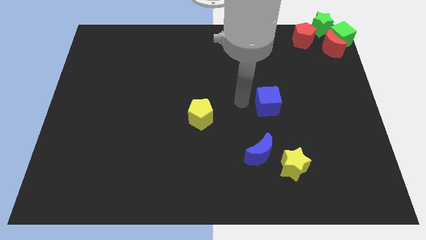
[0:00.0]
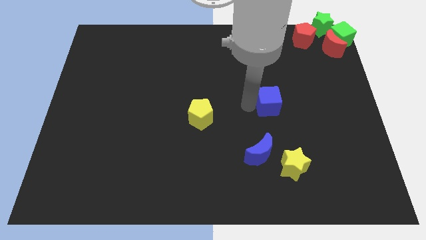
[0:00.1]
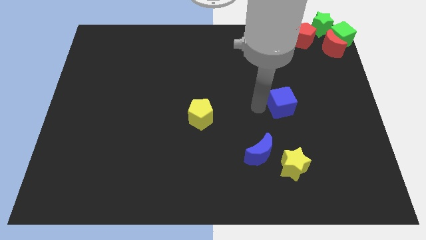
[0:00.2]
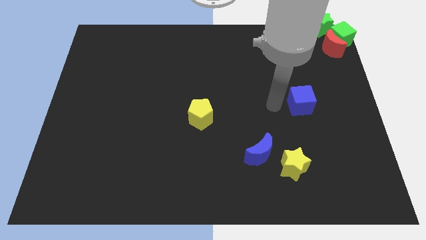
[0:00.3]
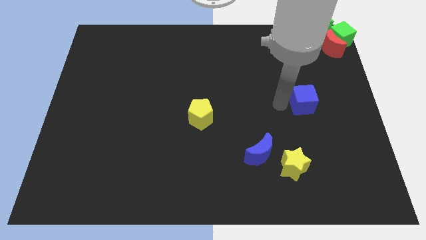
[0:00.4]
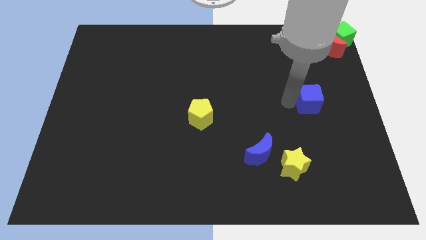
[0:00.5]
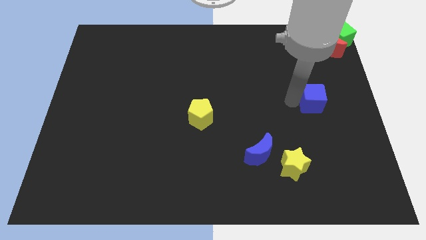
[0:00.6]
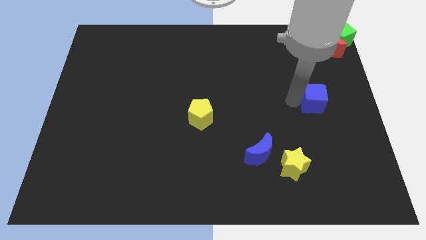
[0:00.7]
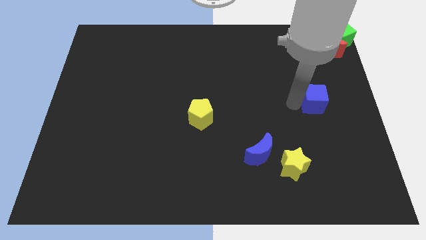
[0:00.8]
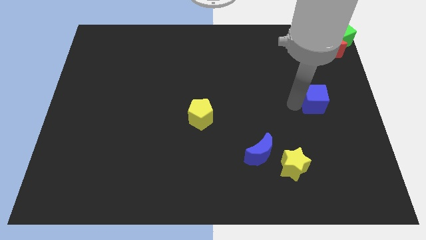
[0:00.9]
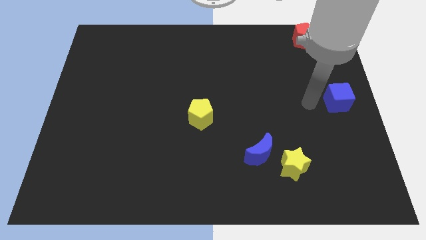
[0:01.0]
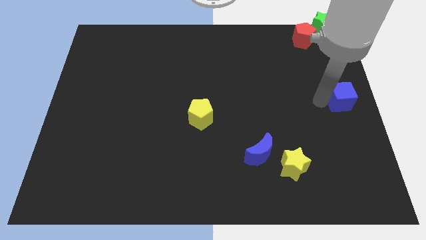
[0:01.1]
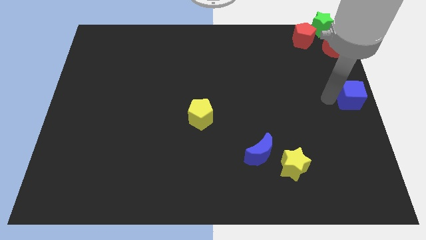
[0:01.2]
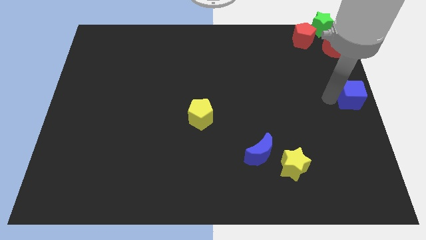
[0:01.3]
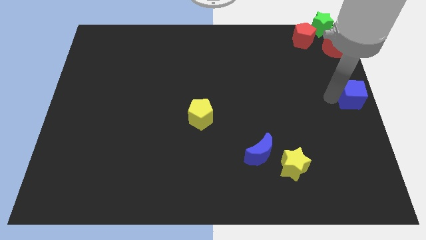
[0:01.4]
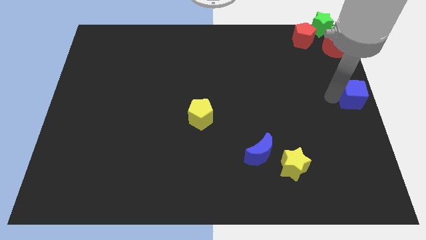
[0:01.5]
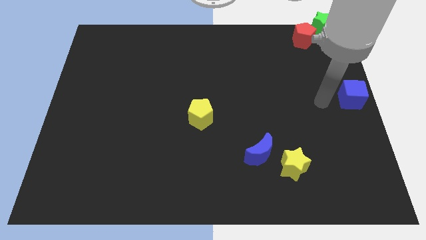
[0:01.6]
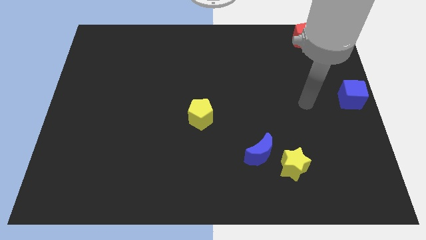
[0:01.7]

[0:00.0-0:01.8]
push the blue cube to the center right

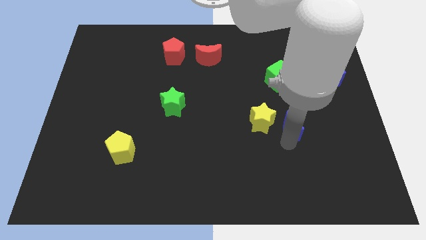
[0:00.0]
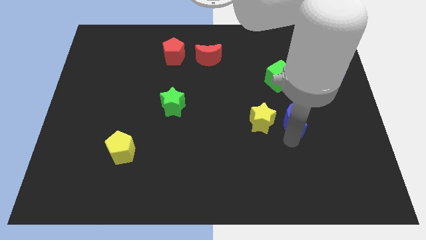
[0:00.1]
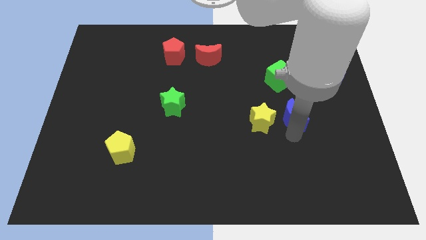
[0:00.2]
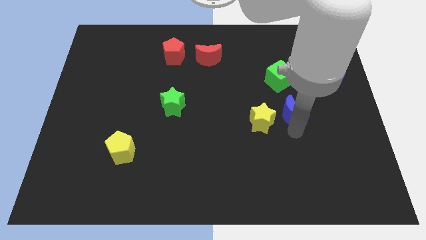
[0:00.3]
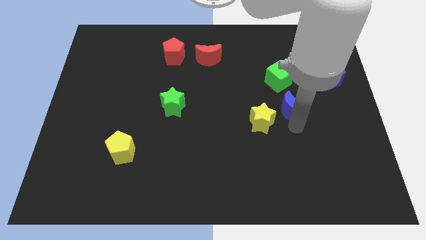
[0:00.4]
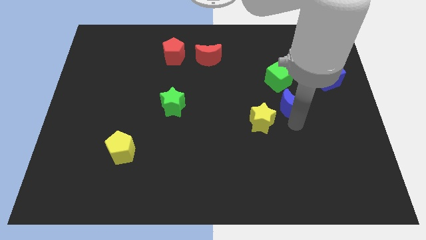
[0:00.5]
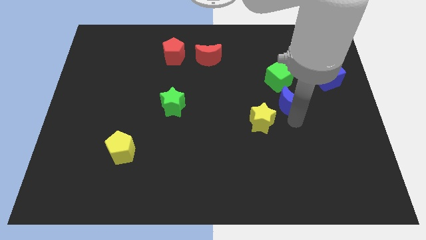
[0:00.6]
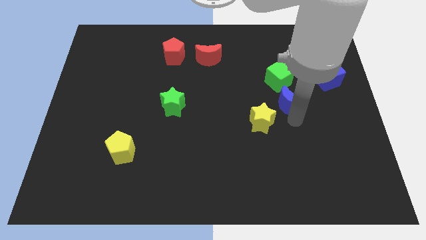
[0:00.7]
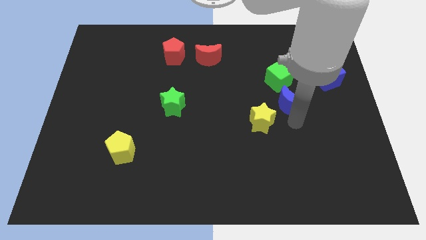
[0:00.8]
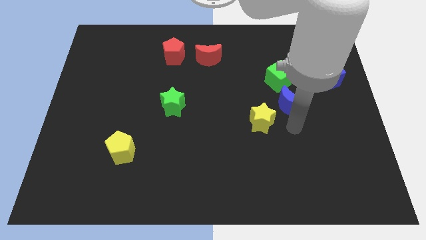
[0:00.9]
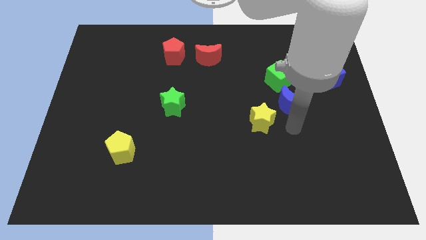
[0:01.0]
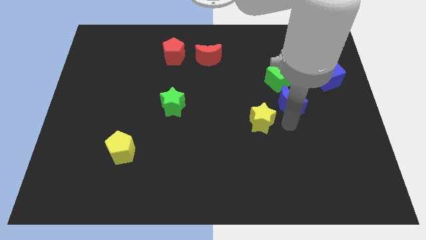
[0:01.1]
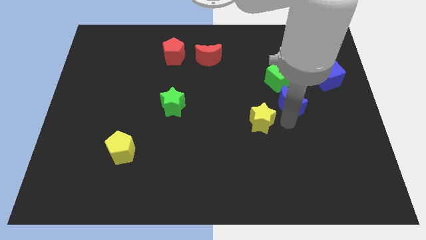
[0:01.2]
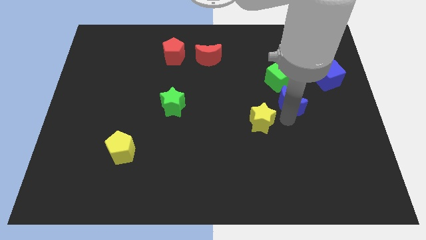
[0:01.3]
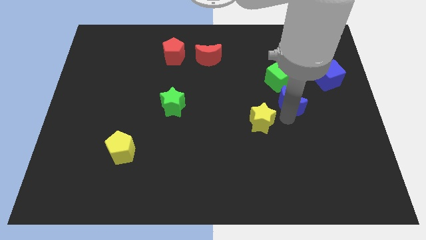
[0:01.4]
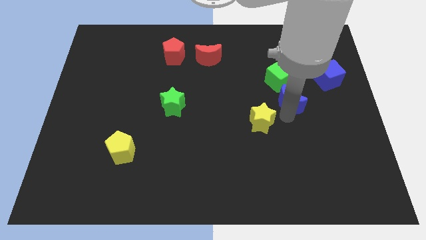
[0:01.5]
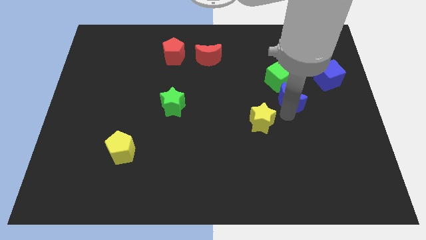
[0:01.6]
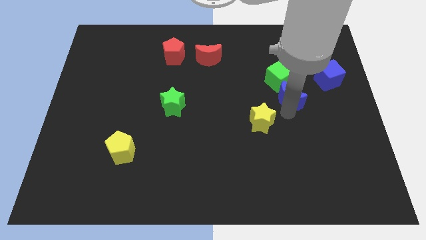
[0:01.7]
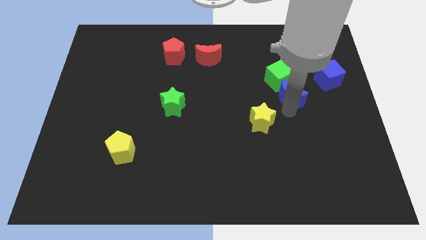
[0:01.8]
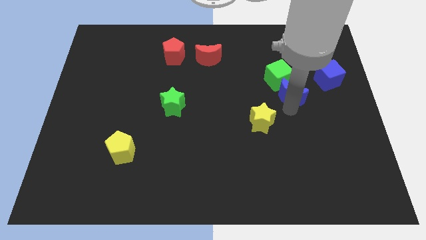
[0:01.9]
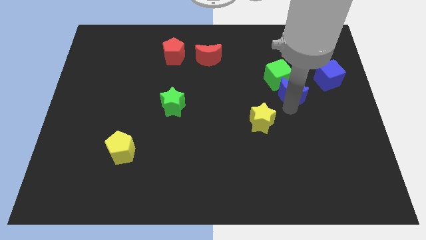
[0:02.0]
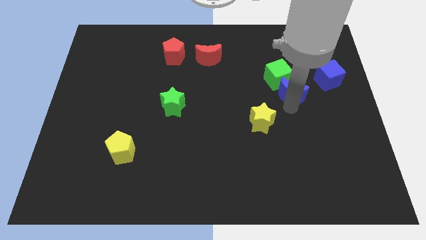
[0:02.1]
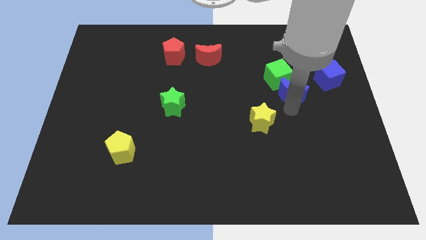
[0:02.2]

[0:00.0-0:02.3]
push the blue moon into the green cube

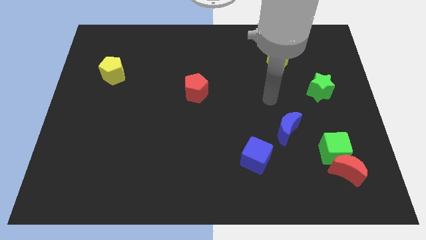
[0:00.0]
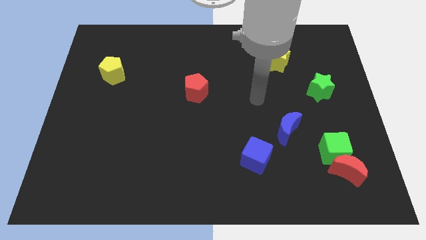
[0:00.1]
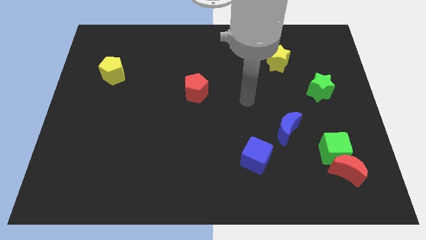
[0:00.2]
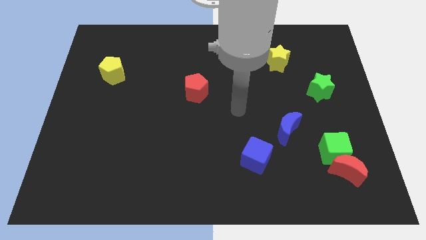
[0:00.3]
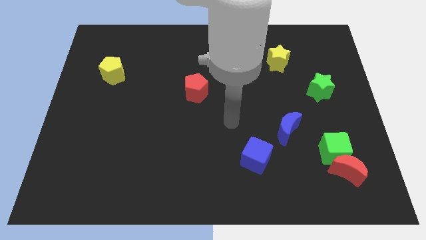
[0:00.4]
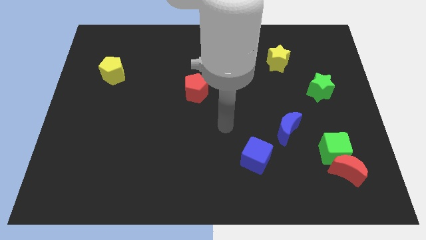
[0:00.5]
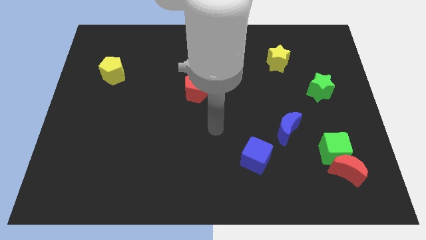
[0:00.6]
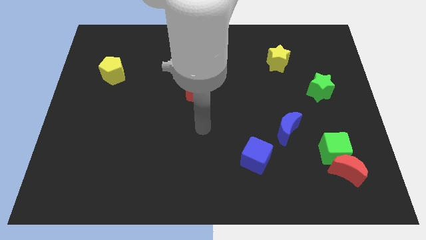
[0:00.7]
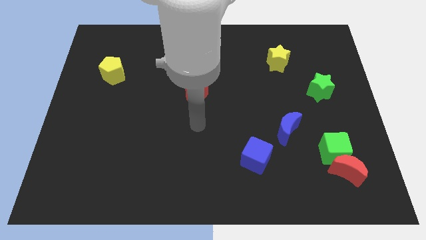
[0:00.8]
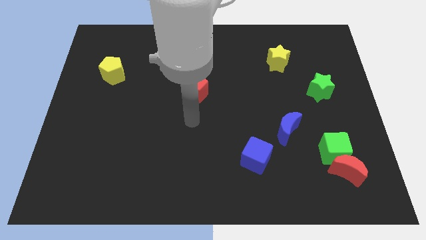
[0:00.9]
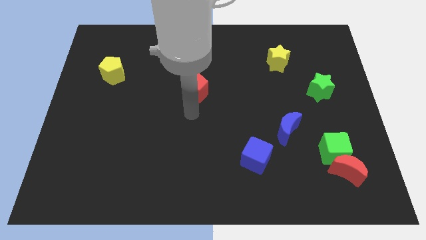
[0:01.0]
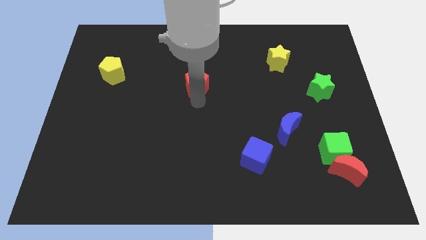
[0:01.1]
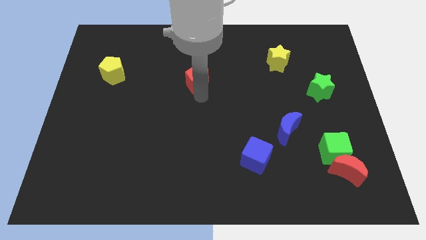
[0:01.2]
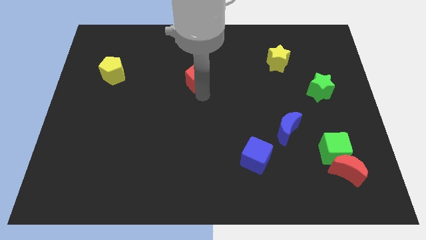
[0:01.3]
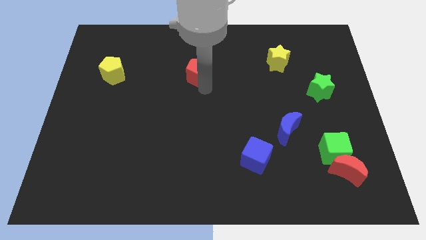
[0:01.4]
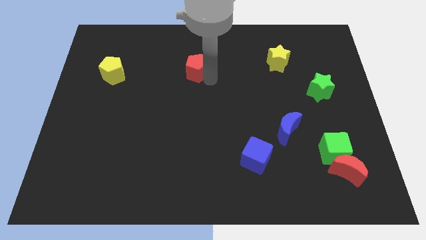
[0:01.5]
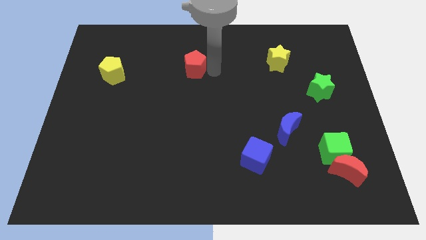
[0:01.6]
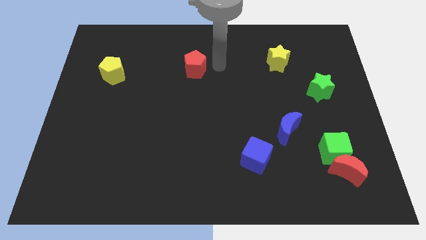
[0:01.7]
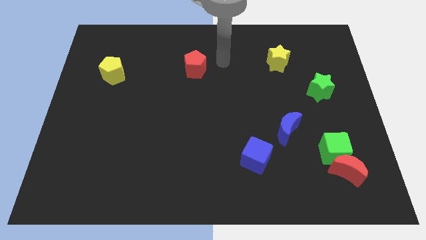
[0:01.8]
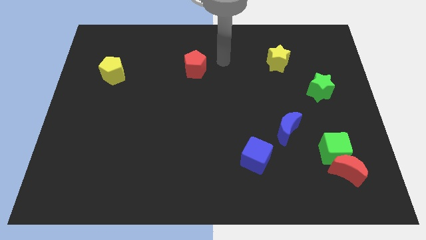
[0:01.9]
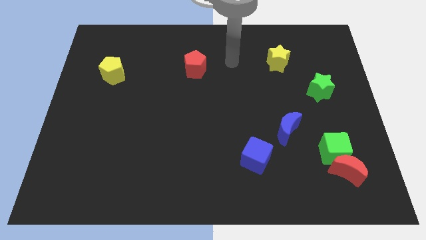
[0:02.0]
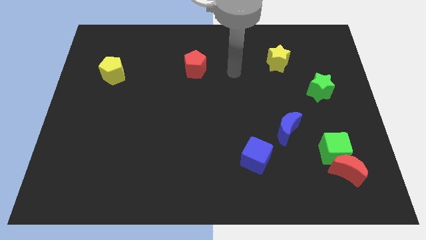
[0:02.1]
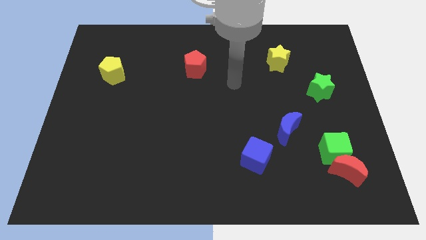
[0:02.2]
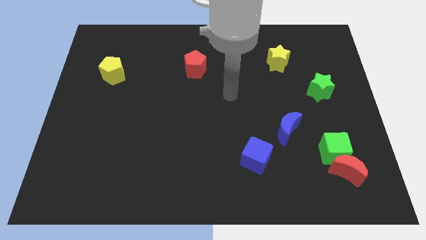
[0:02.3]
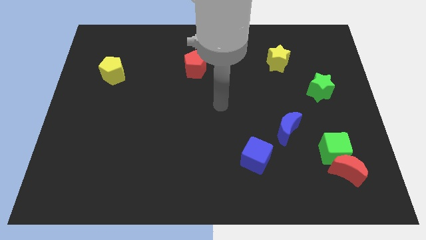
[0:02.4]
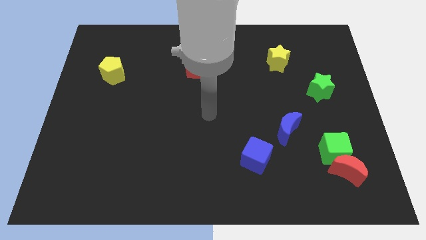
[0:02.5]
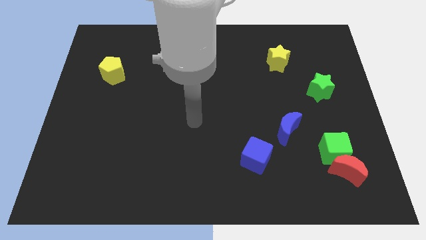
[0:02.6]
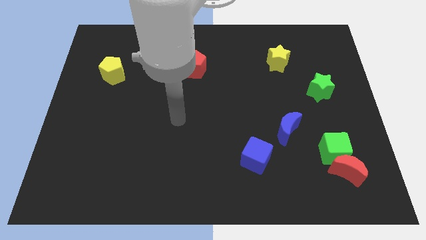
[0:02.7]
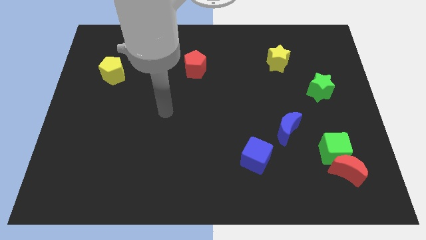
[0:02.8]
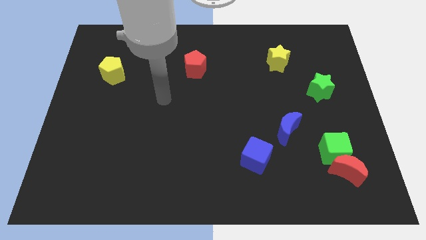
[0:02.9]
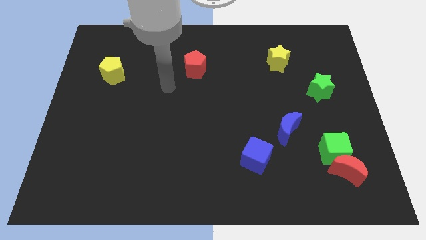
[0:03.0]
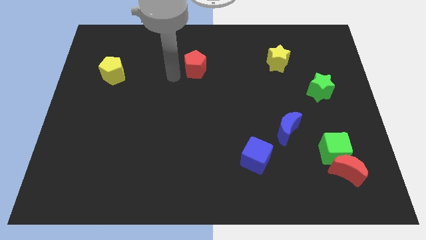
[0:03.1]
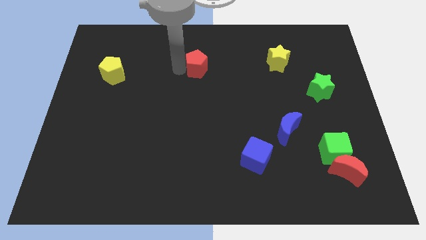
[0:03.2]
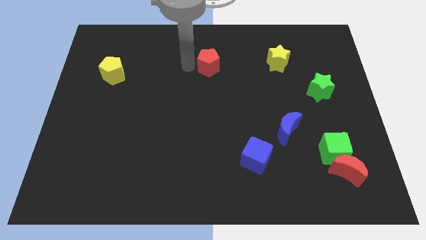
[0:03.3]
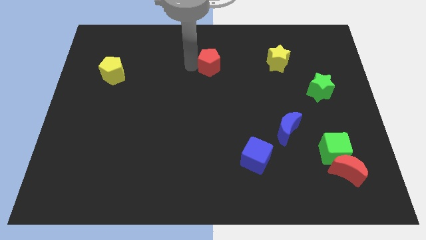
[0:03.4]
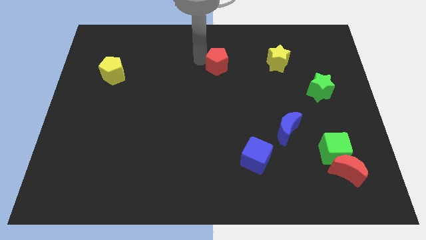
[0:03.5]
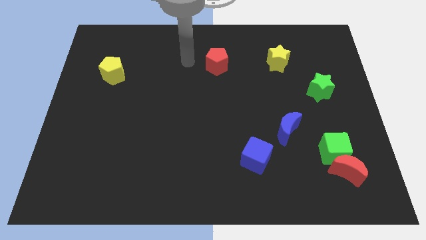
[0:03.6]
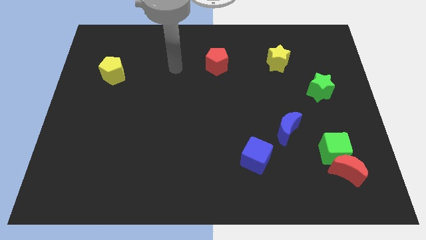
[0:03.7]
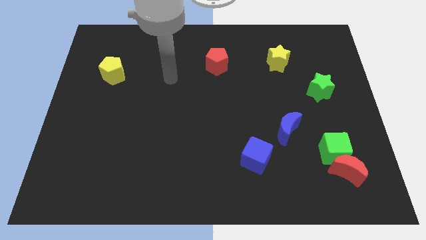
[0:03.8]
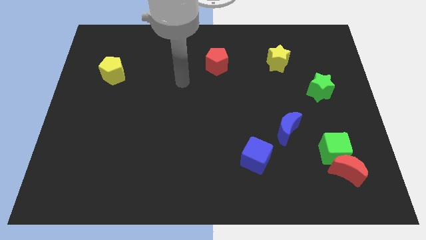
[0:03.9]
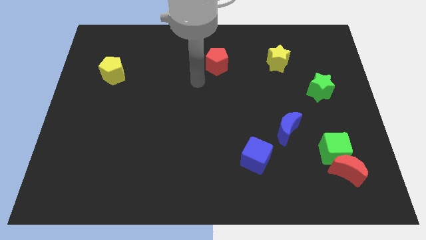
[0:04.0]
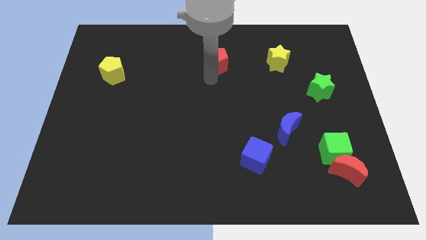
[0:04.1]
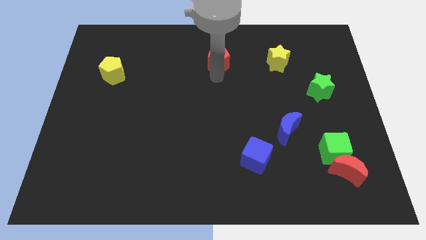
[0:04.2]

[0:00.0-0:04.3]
push the red pentagon towards the top center

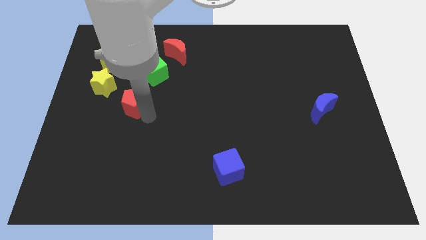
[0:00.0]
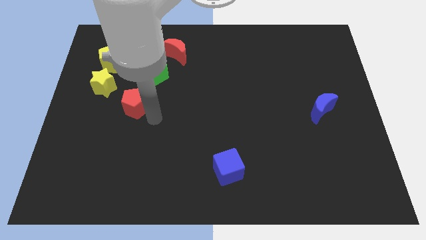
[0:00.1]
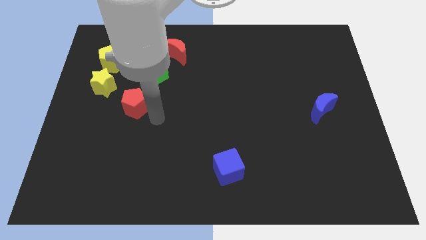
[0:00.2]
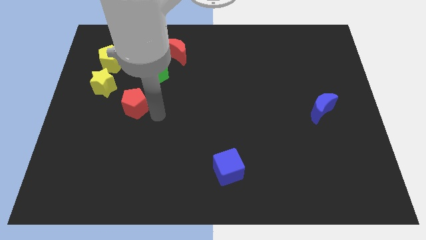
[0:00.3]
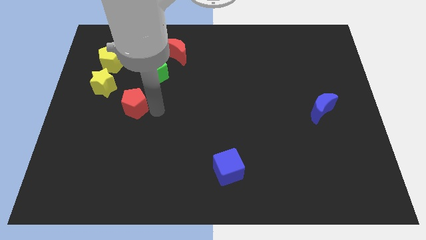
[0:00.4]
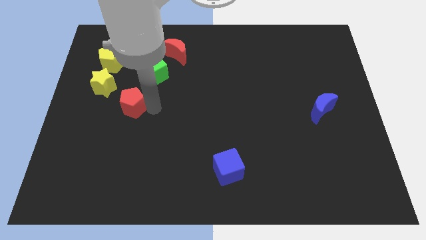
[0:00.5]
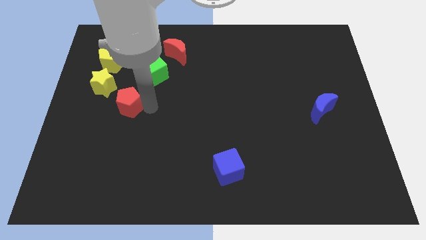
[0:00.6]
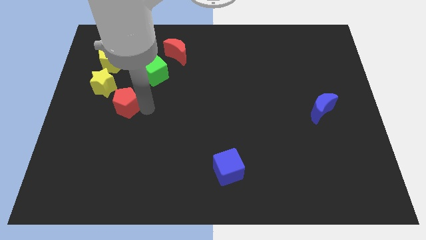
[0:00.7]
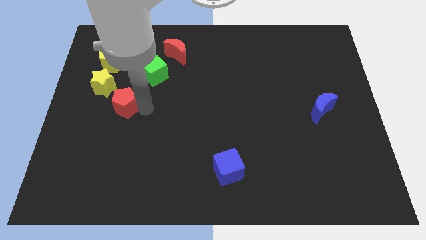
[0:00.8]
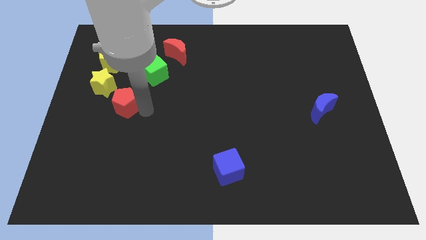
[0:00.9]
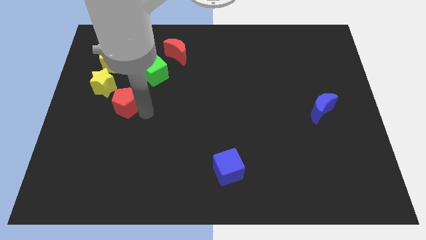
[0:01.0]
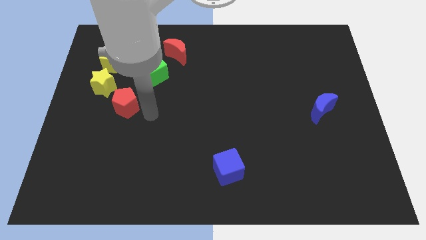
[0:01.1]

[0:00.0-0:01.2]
slightly move the red polygon
